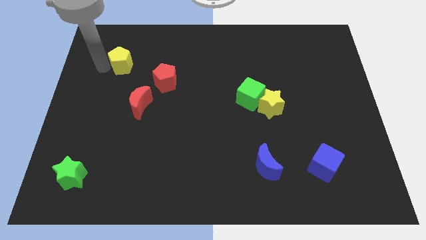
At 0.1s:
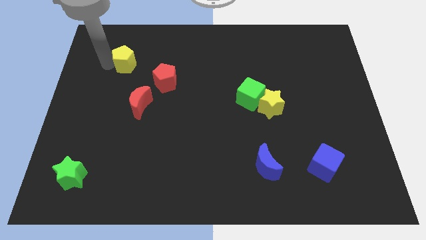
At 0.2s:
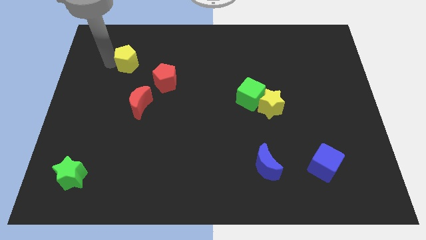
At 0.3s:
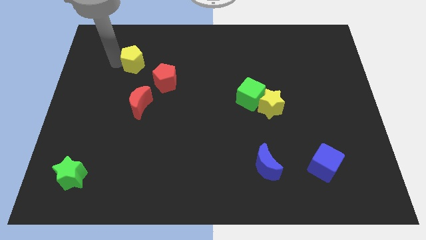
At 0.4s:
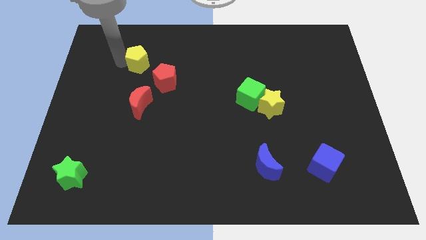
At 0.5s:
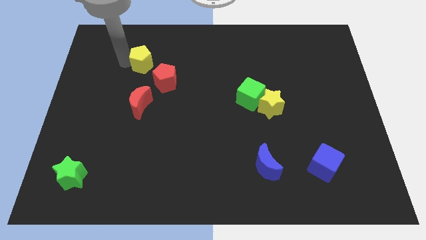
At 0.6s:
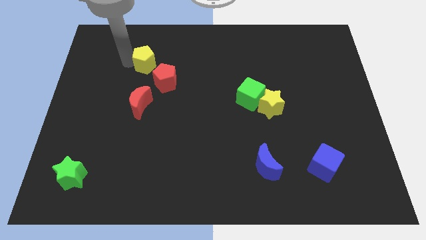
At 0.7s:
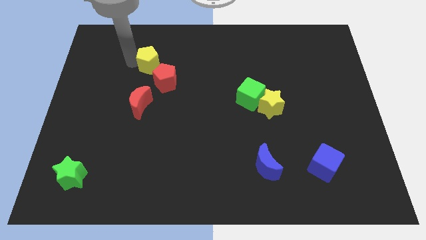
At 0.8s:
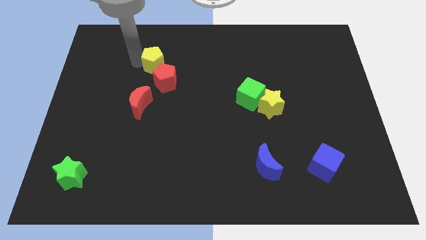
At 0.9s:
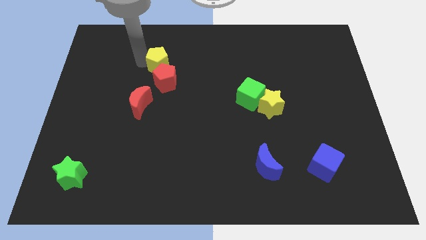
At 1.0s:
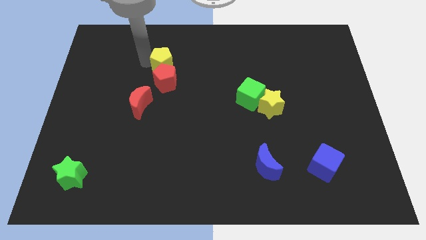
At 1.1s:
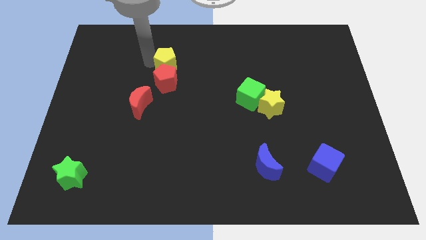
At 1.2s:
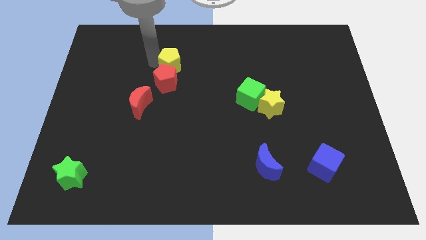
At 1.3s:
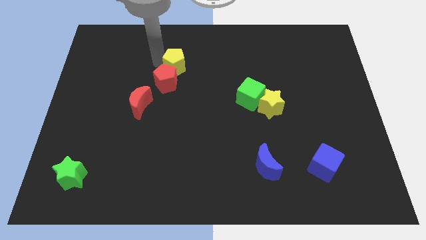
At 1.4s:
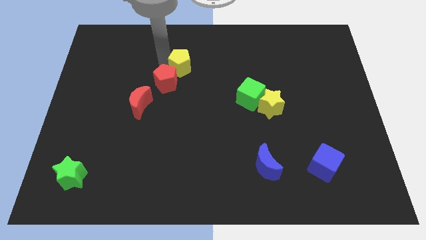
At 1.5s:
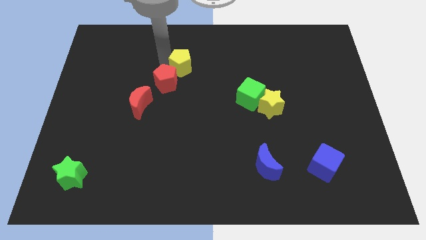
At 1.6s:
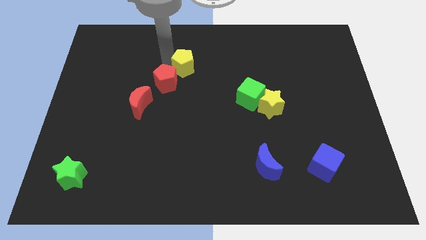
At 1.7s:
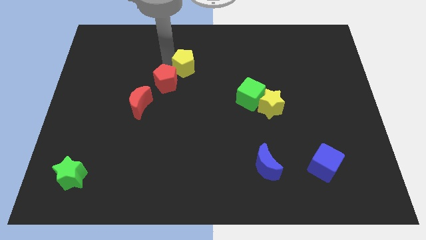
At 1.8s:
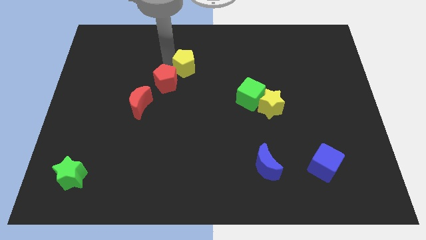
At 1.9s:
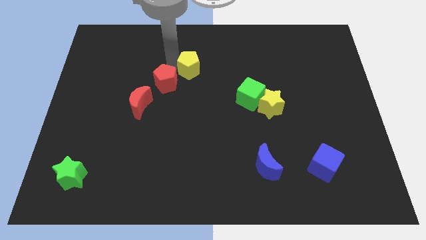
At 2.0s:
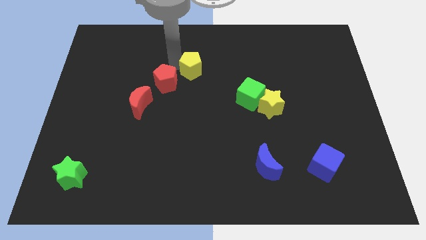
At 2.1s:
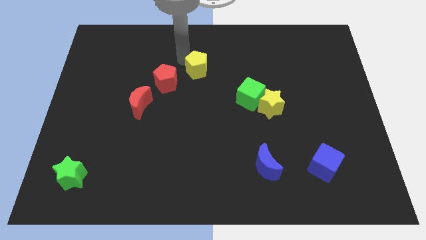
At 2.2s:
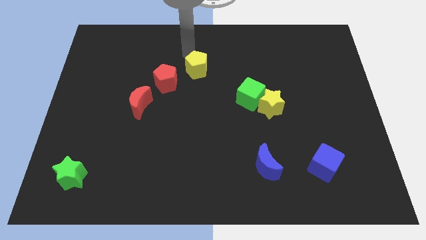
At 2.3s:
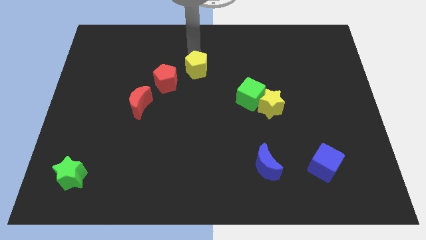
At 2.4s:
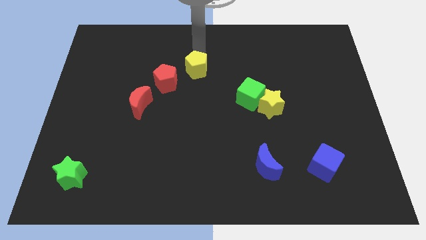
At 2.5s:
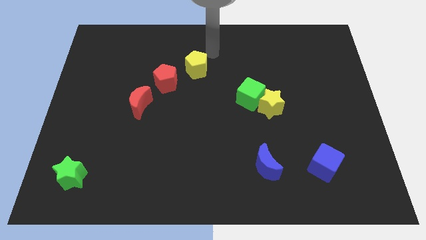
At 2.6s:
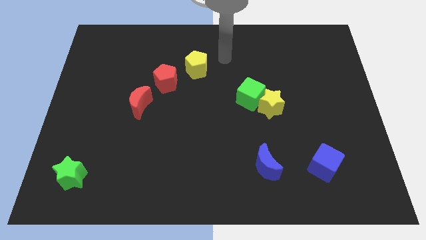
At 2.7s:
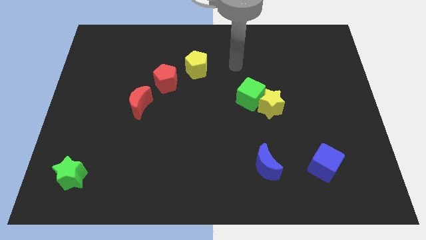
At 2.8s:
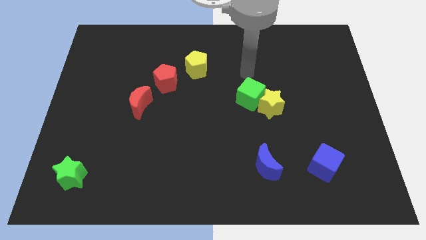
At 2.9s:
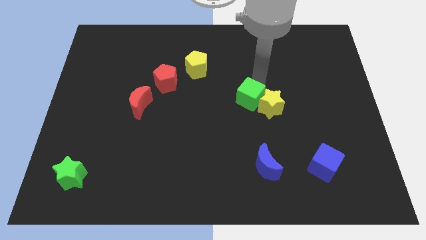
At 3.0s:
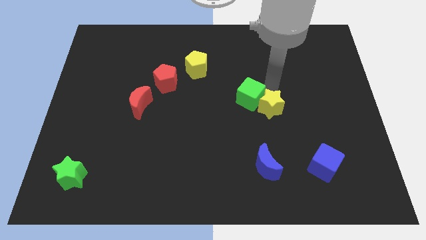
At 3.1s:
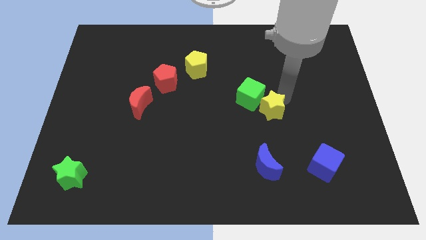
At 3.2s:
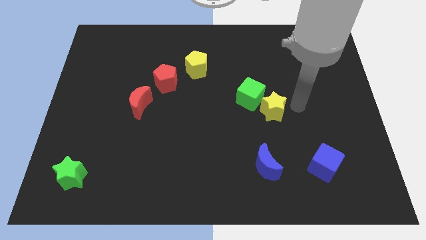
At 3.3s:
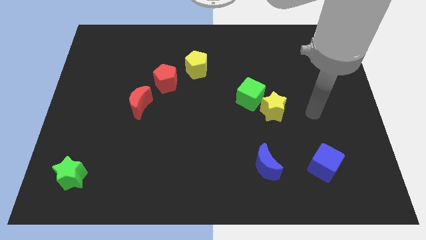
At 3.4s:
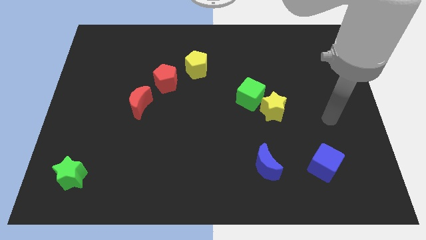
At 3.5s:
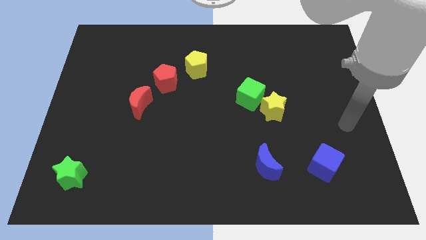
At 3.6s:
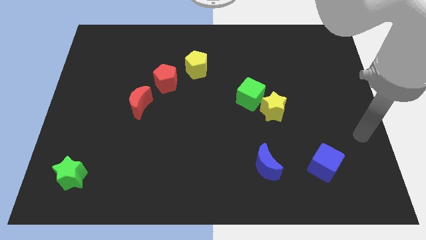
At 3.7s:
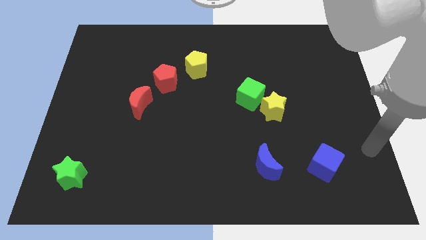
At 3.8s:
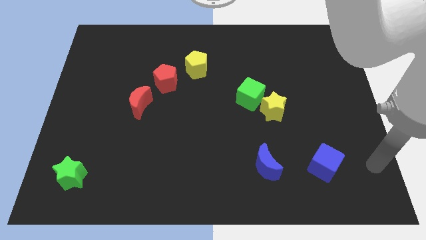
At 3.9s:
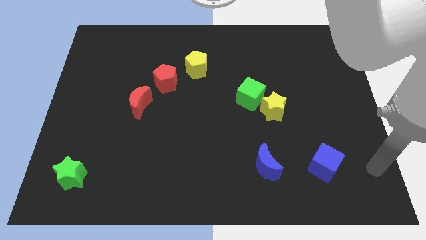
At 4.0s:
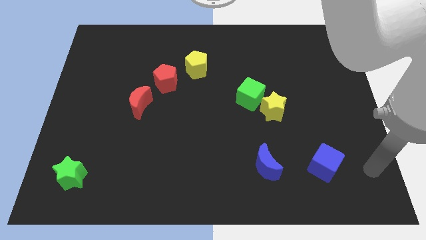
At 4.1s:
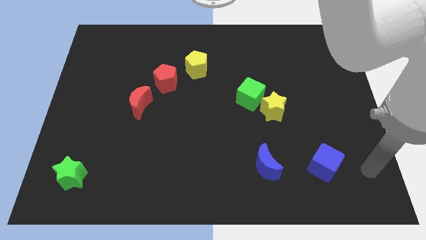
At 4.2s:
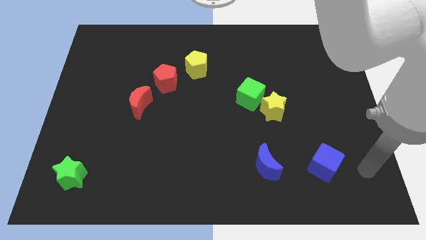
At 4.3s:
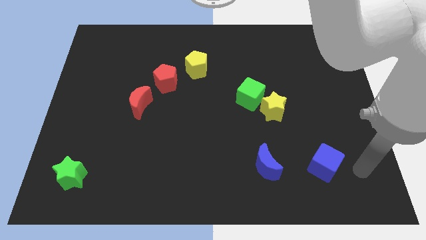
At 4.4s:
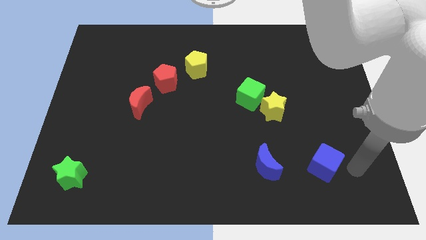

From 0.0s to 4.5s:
move the yellow pentagon diagonally to green cube

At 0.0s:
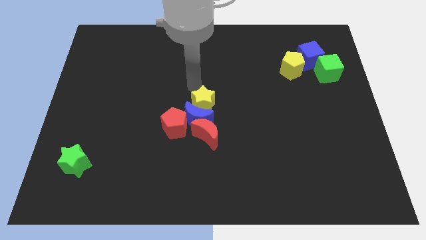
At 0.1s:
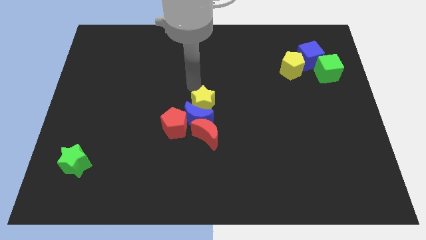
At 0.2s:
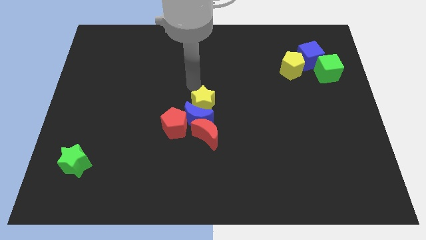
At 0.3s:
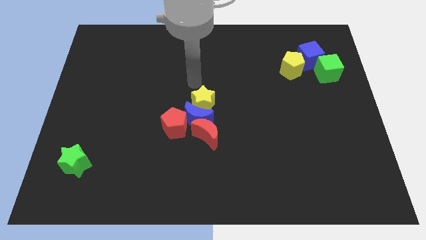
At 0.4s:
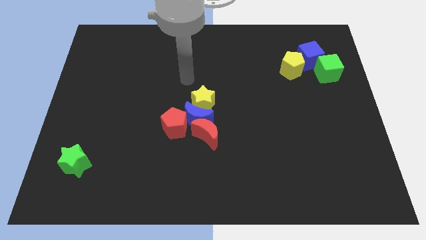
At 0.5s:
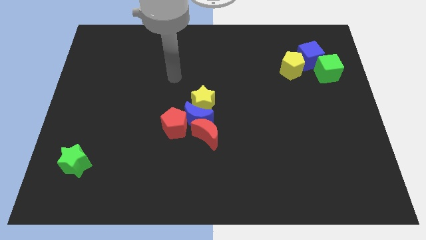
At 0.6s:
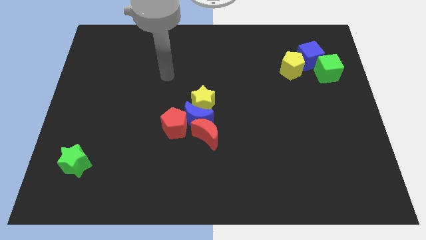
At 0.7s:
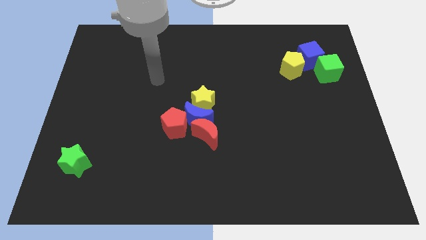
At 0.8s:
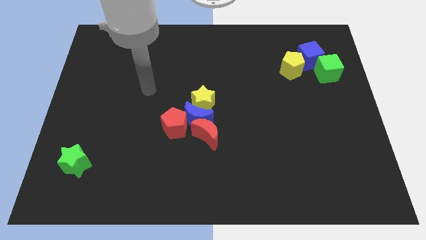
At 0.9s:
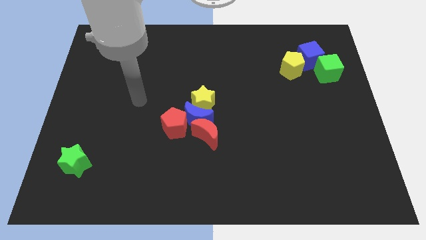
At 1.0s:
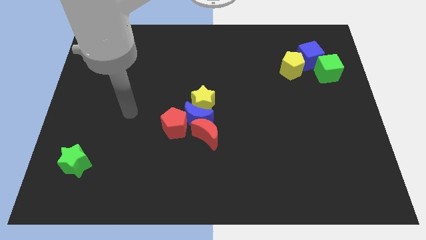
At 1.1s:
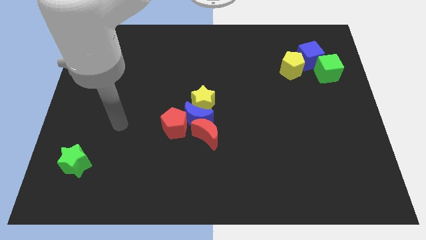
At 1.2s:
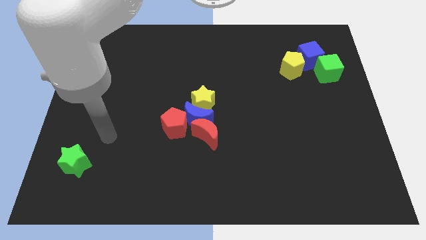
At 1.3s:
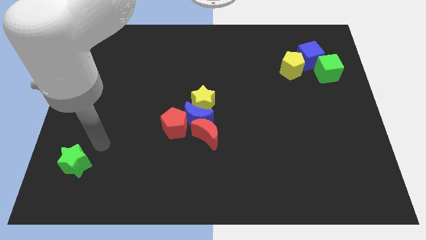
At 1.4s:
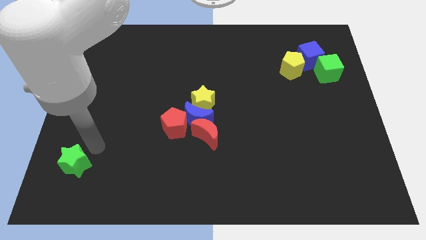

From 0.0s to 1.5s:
move your arm from yellow star to green star

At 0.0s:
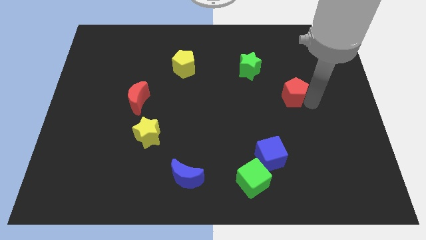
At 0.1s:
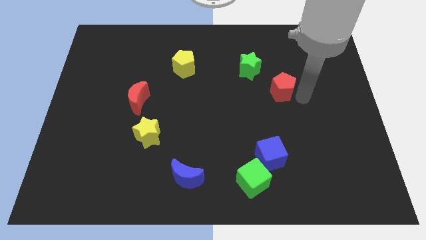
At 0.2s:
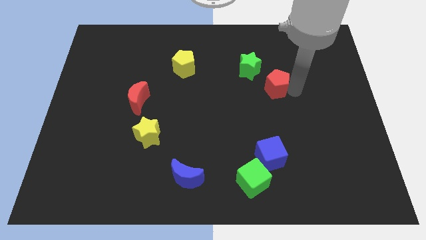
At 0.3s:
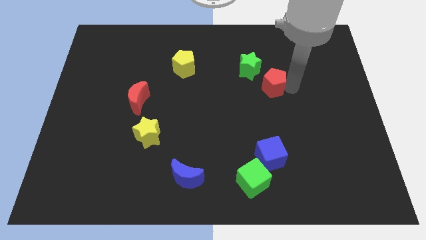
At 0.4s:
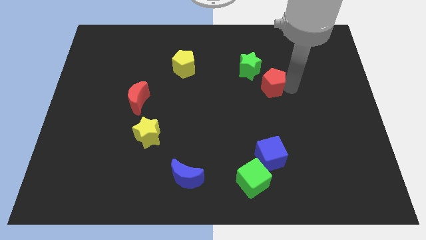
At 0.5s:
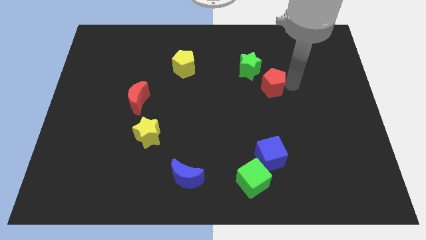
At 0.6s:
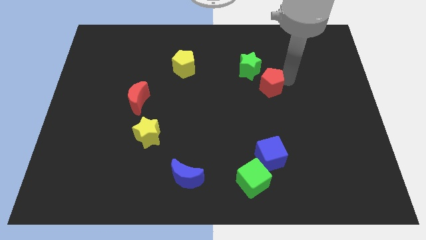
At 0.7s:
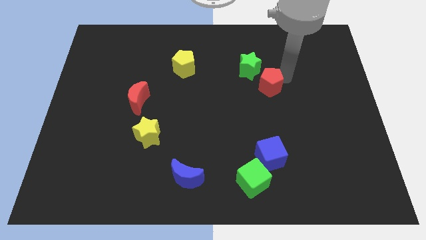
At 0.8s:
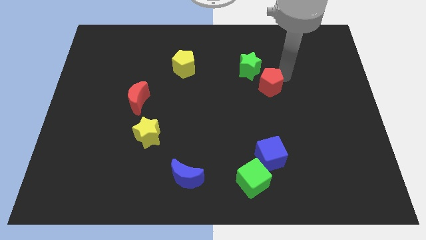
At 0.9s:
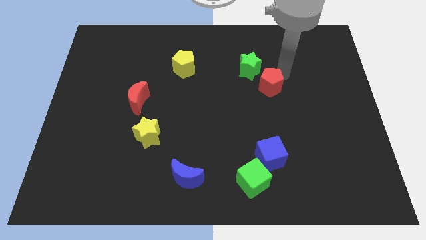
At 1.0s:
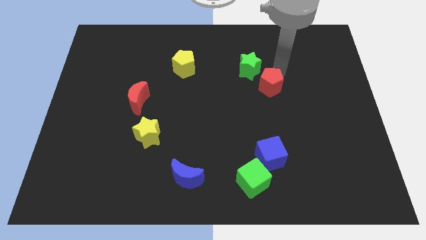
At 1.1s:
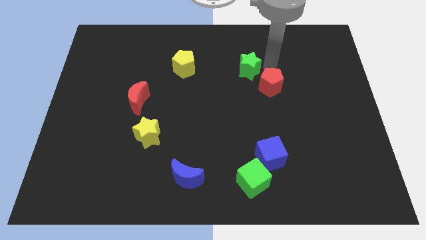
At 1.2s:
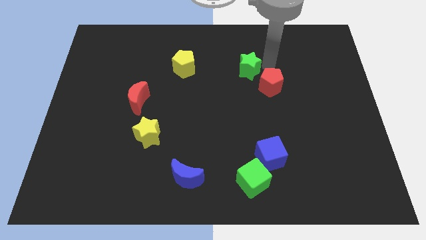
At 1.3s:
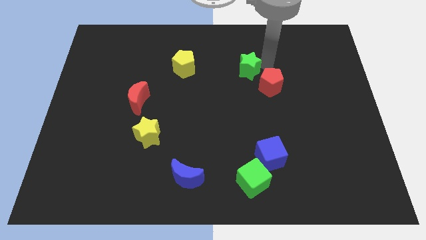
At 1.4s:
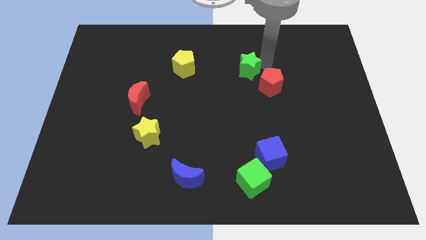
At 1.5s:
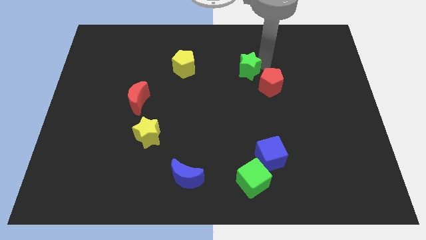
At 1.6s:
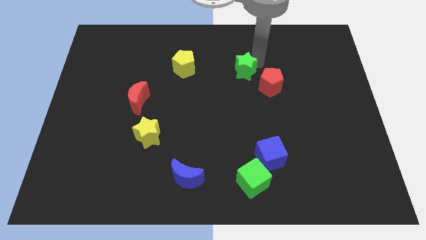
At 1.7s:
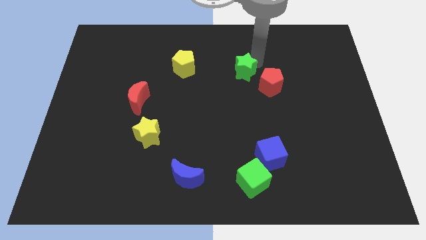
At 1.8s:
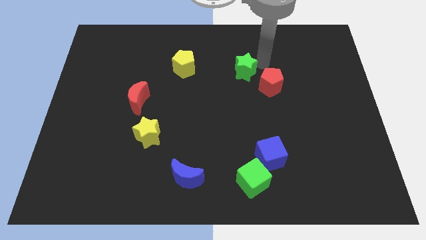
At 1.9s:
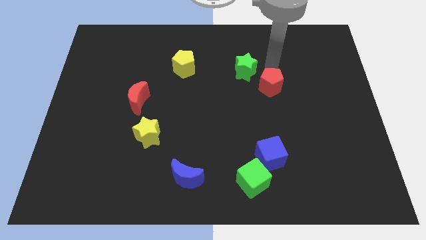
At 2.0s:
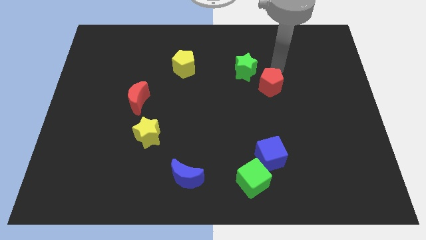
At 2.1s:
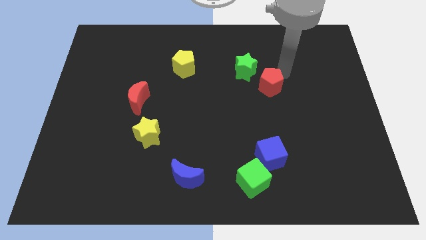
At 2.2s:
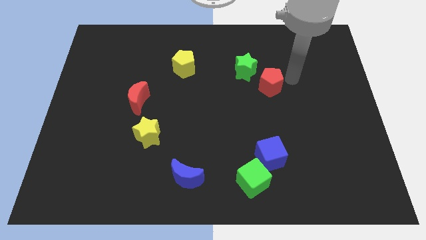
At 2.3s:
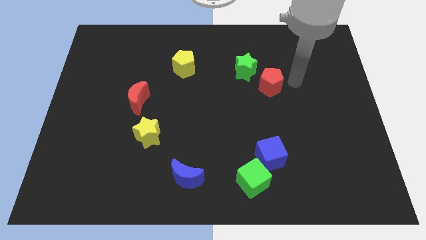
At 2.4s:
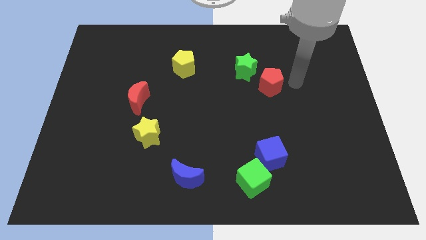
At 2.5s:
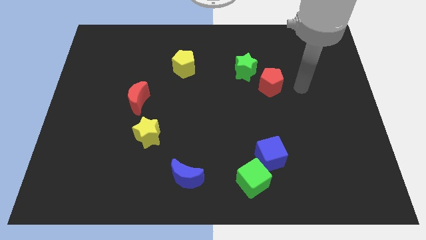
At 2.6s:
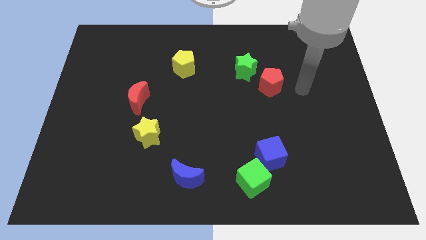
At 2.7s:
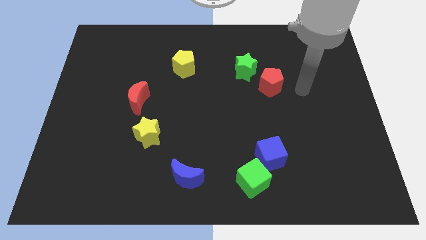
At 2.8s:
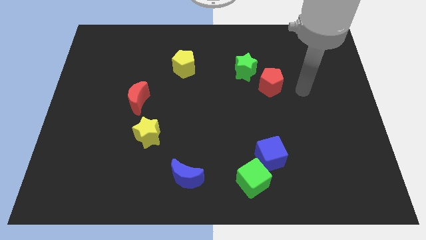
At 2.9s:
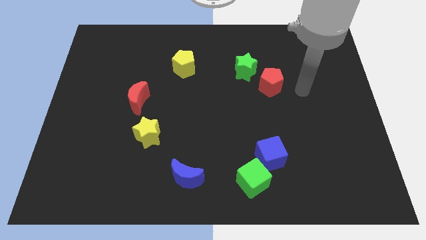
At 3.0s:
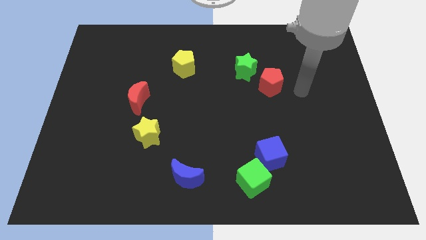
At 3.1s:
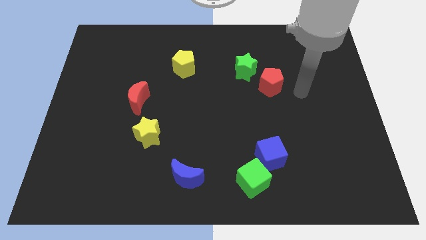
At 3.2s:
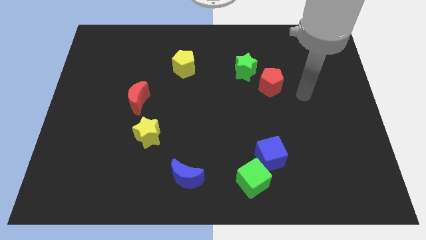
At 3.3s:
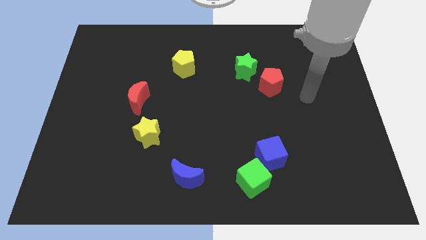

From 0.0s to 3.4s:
move the red pentagon diagonal to the green star
